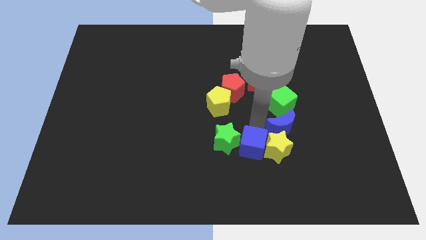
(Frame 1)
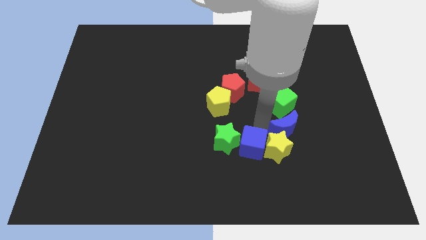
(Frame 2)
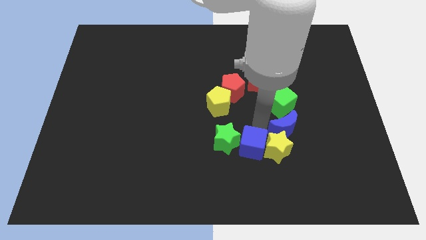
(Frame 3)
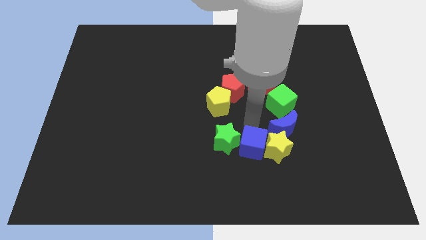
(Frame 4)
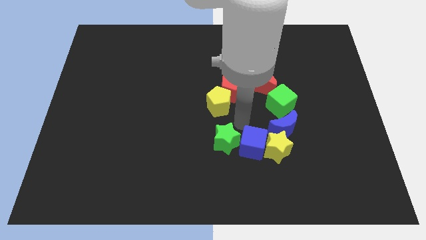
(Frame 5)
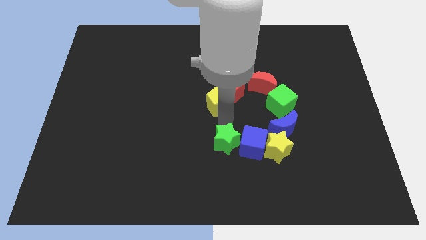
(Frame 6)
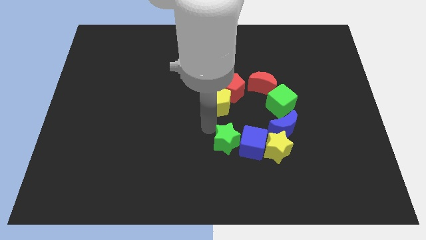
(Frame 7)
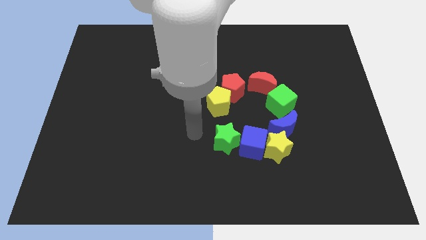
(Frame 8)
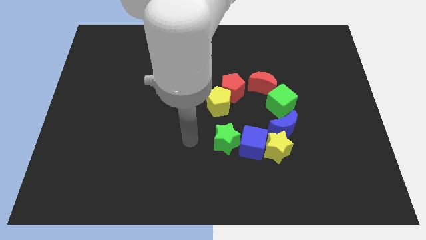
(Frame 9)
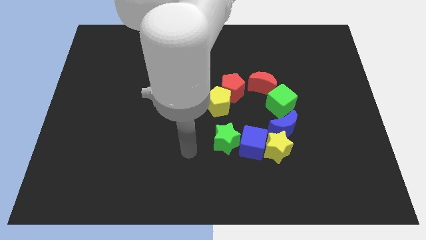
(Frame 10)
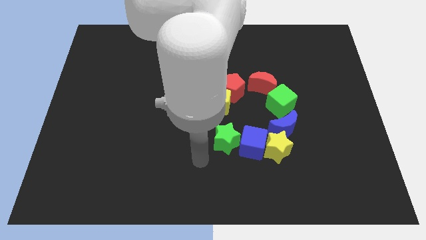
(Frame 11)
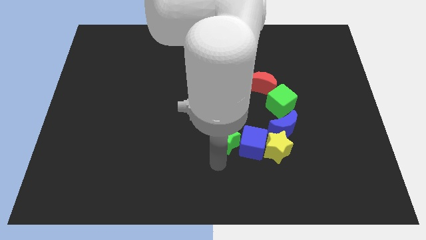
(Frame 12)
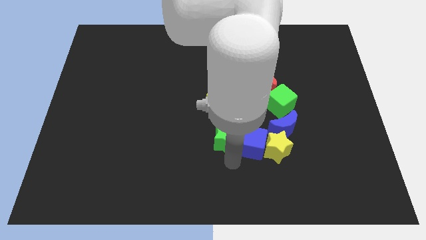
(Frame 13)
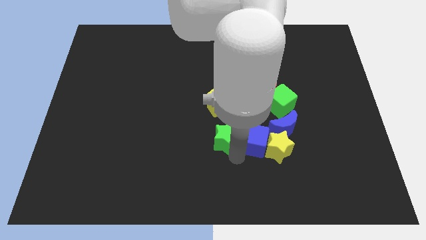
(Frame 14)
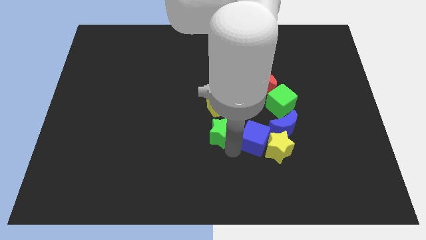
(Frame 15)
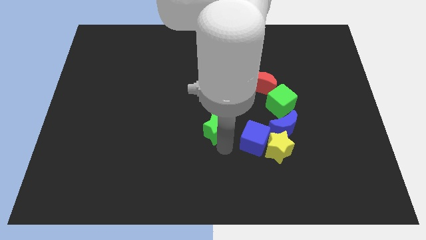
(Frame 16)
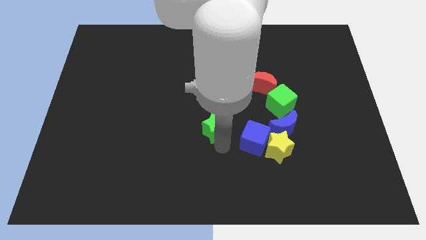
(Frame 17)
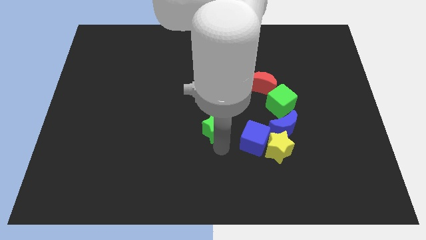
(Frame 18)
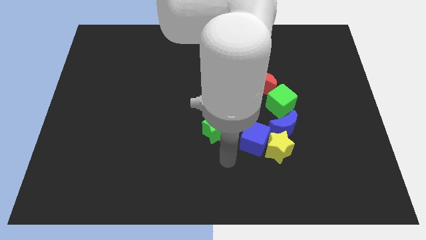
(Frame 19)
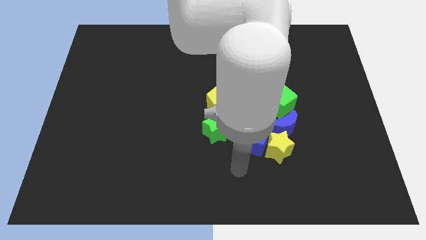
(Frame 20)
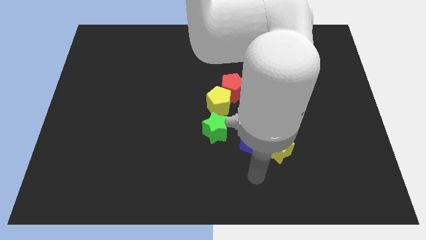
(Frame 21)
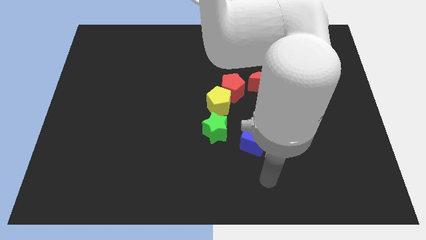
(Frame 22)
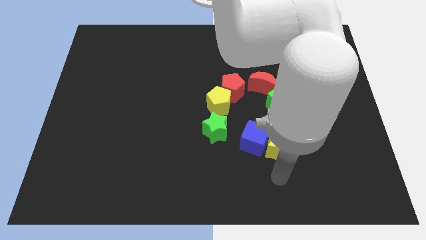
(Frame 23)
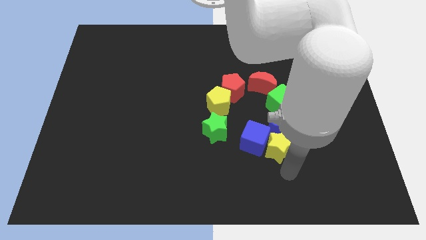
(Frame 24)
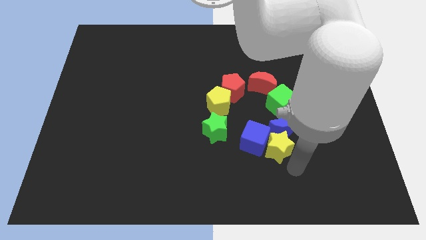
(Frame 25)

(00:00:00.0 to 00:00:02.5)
slightly push the green star up

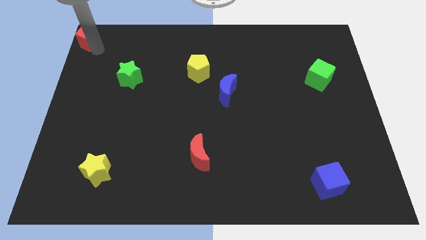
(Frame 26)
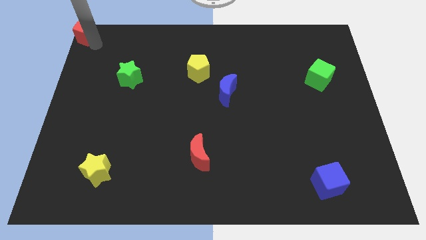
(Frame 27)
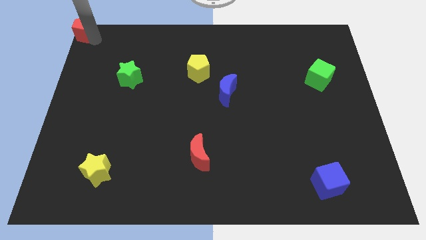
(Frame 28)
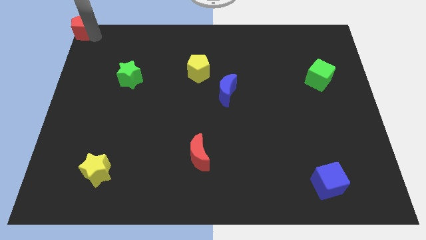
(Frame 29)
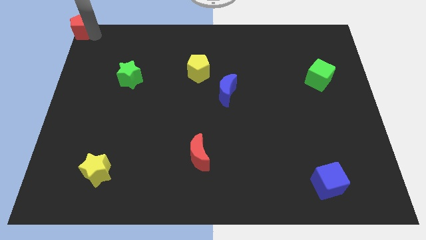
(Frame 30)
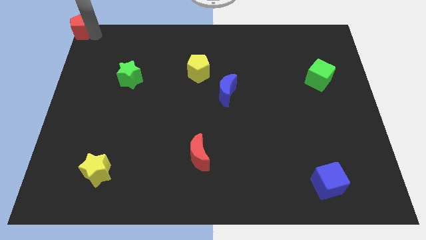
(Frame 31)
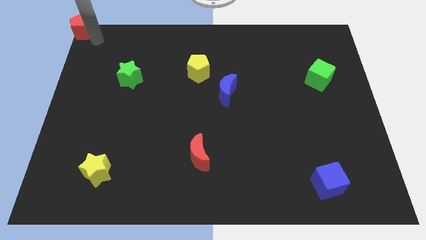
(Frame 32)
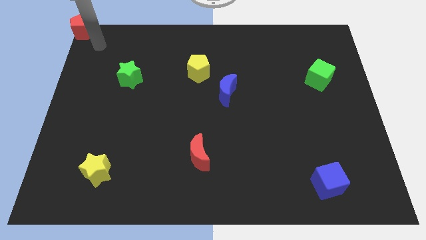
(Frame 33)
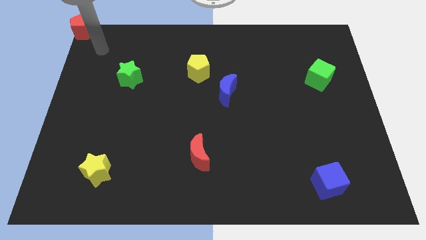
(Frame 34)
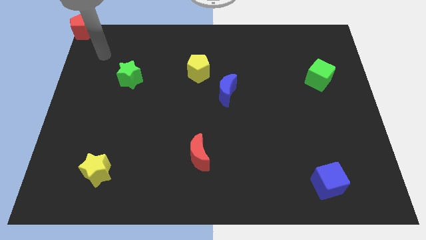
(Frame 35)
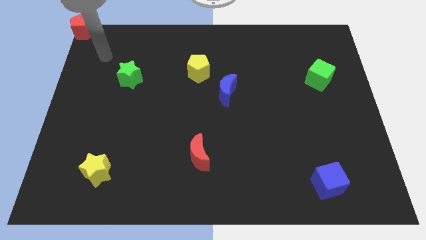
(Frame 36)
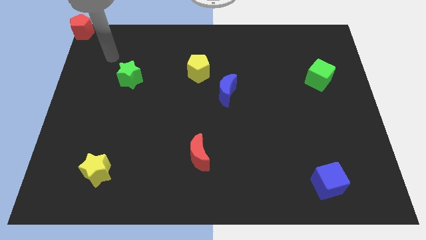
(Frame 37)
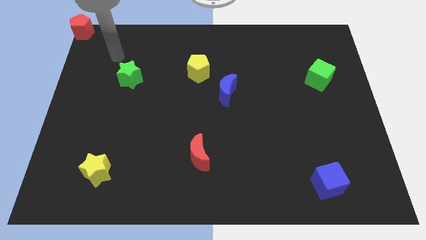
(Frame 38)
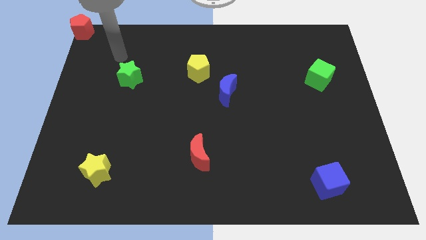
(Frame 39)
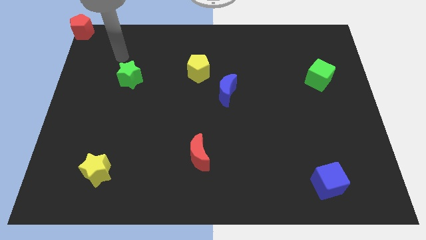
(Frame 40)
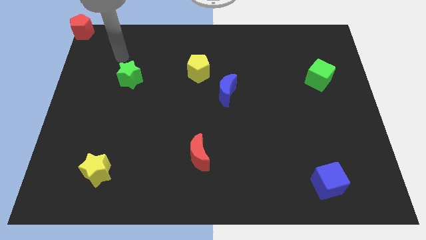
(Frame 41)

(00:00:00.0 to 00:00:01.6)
move the arm towards the green star

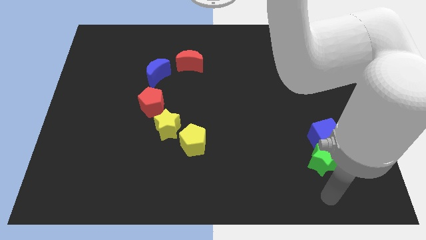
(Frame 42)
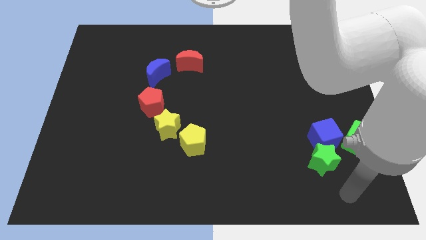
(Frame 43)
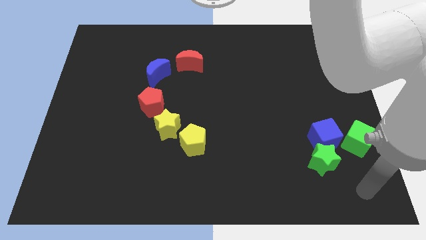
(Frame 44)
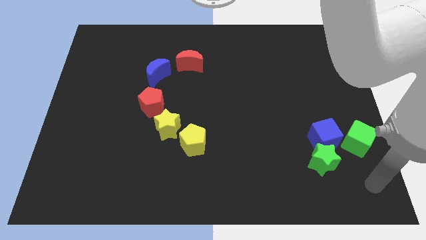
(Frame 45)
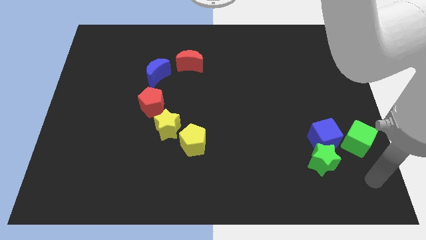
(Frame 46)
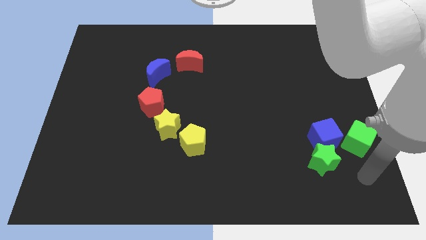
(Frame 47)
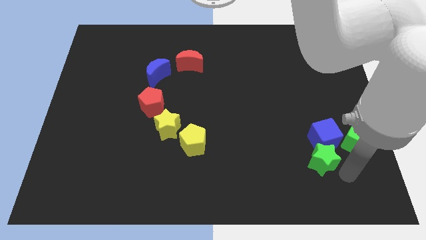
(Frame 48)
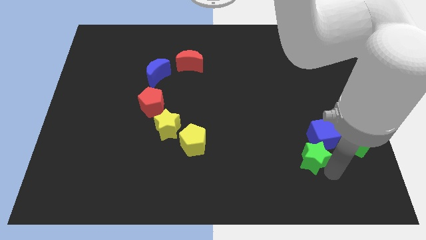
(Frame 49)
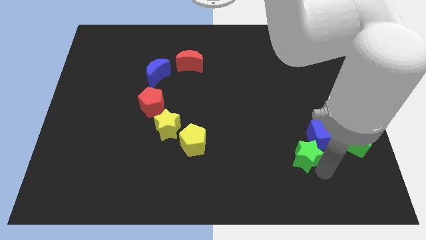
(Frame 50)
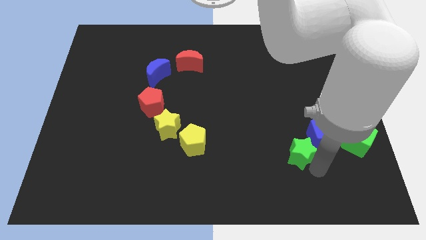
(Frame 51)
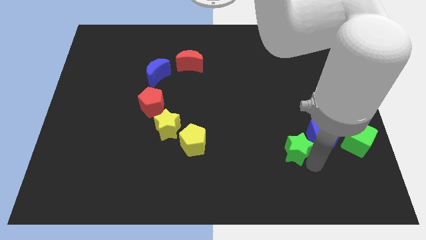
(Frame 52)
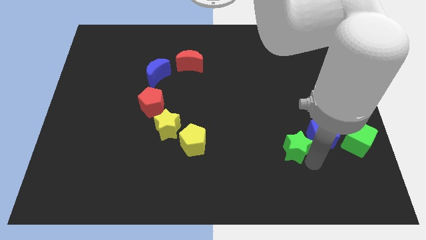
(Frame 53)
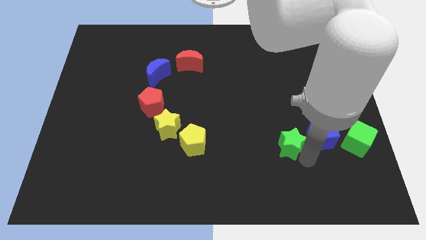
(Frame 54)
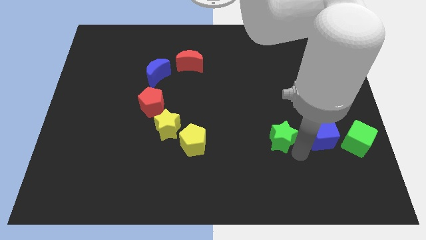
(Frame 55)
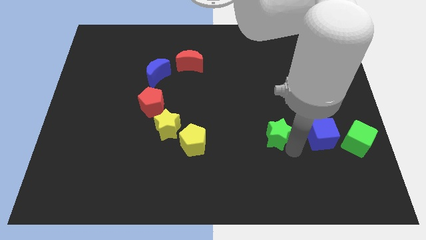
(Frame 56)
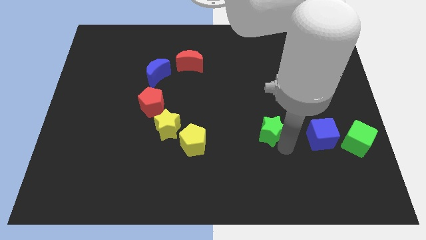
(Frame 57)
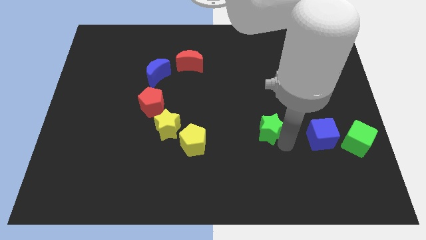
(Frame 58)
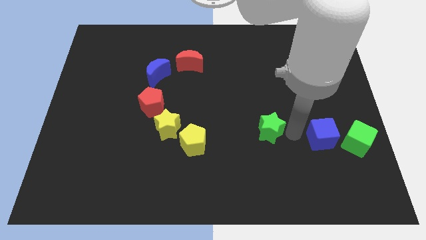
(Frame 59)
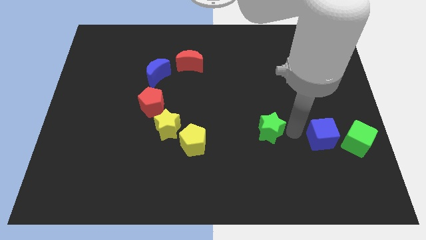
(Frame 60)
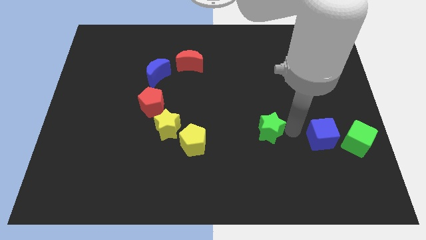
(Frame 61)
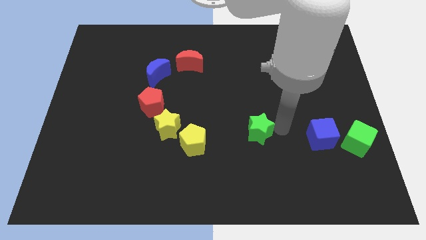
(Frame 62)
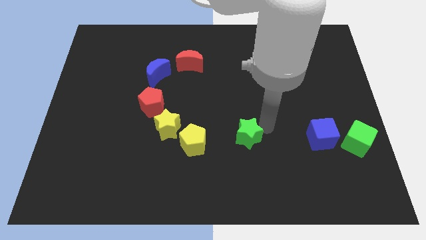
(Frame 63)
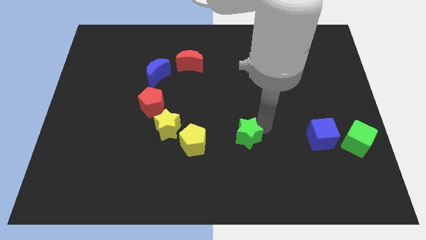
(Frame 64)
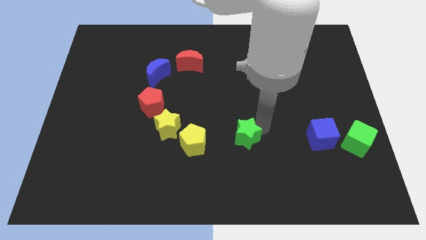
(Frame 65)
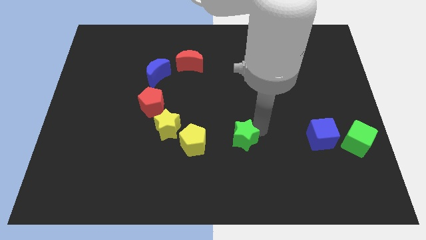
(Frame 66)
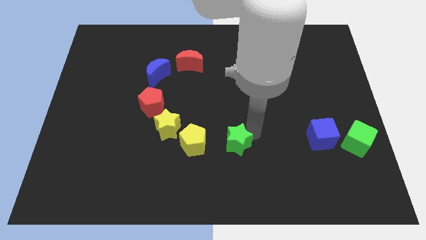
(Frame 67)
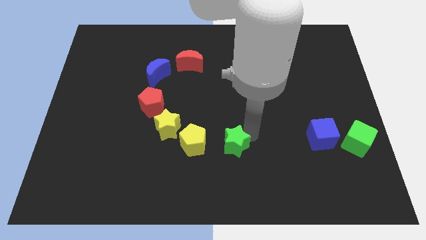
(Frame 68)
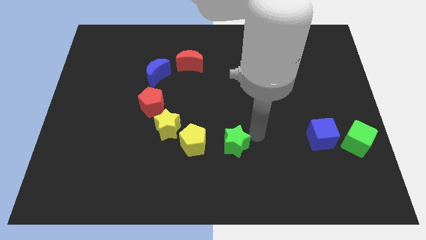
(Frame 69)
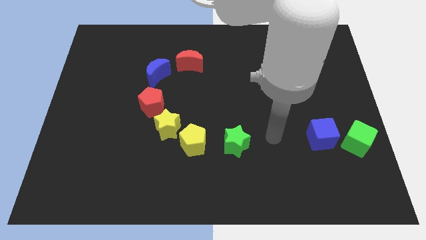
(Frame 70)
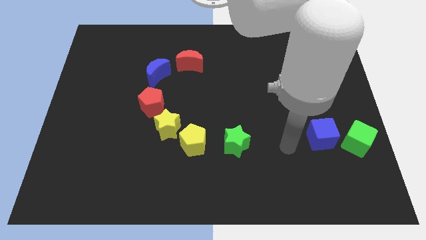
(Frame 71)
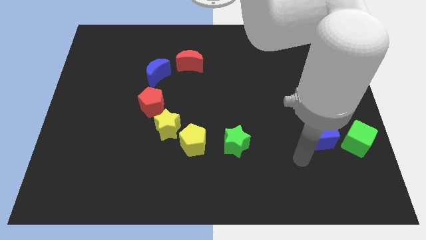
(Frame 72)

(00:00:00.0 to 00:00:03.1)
push the green star to right of the yellow pentagon

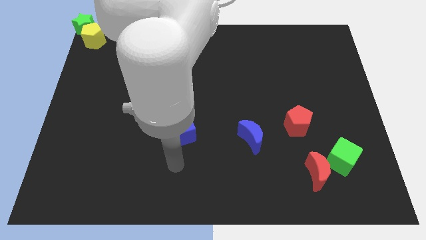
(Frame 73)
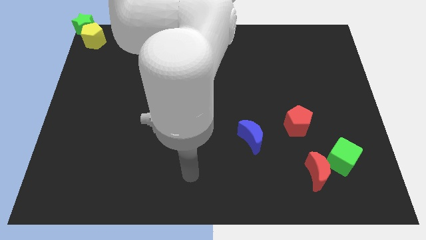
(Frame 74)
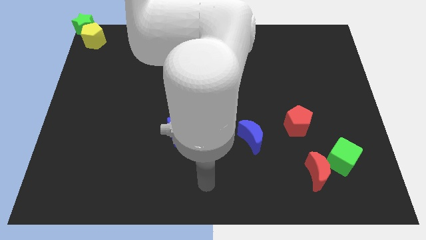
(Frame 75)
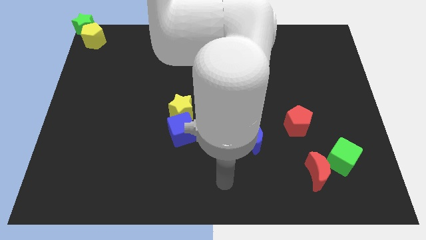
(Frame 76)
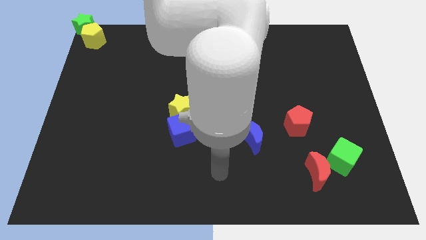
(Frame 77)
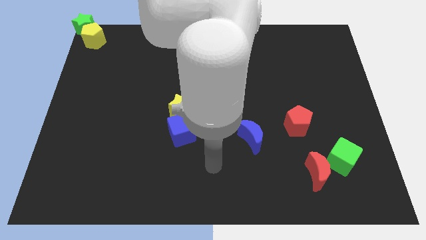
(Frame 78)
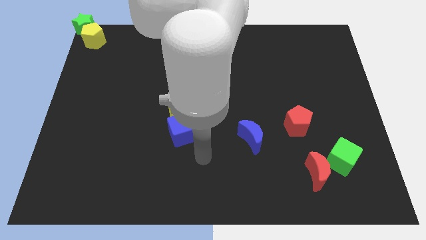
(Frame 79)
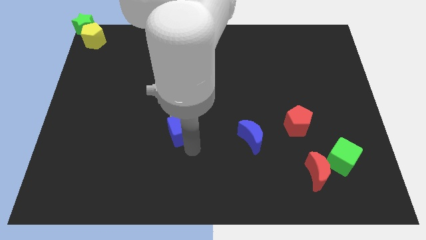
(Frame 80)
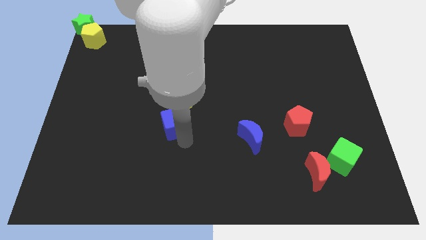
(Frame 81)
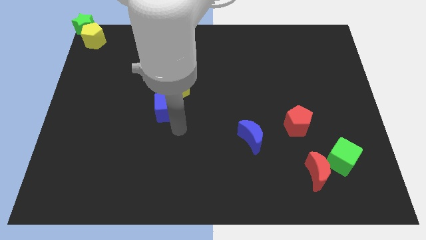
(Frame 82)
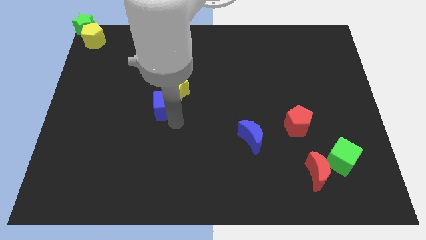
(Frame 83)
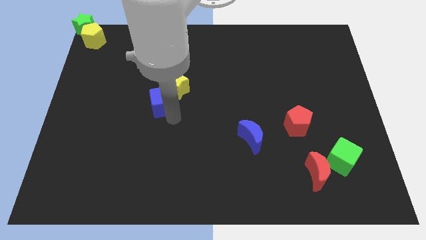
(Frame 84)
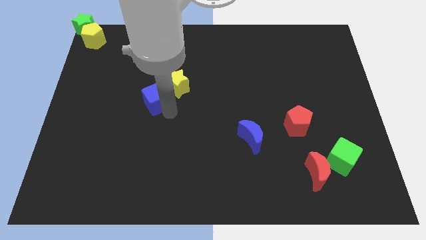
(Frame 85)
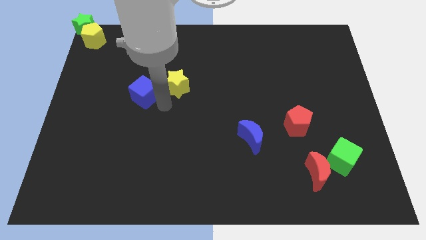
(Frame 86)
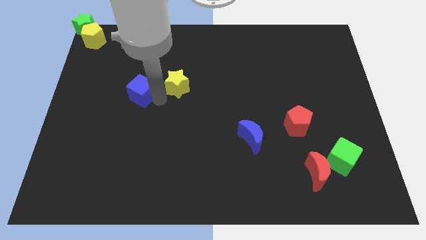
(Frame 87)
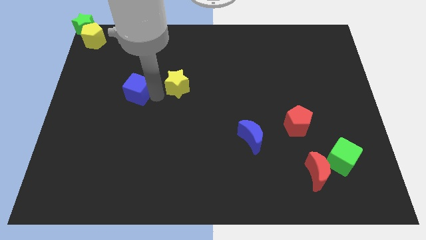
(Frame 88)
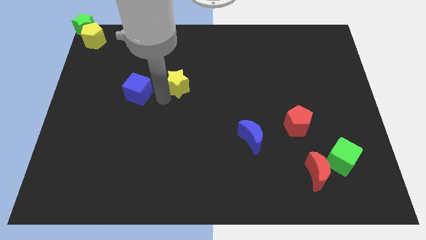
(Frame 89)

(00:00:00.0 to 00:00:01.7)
slide the blue cube to the left side of the yellow star
